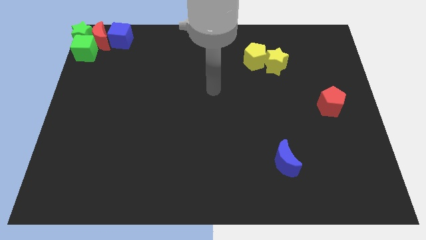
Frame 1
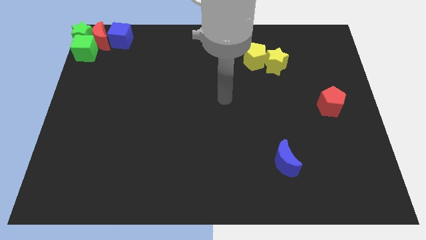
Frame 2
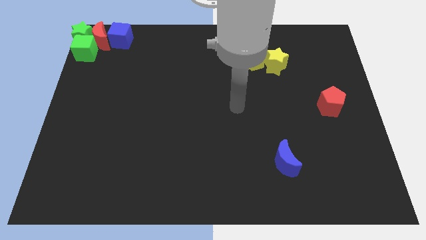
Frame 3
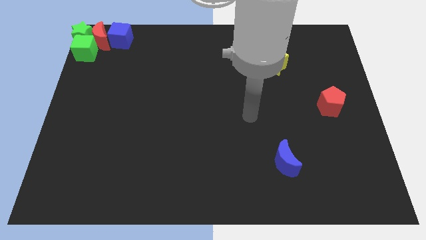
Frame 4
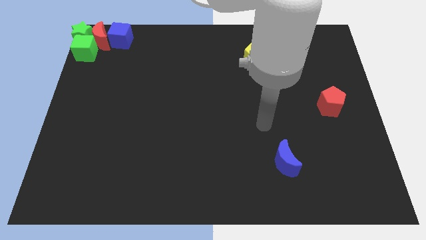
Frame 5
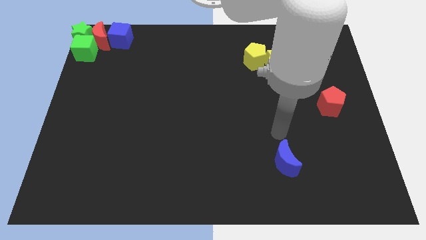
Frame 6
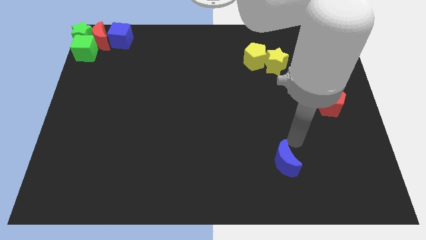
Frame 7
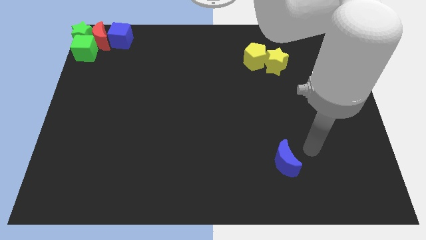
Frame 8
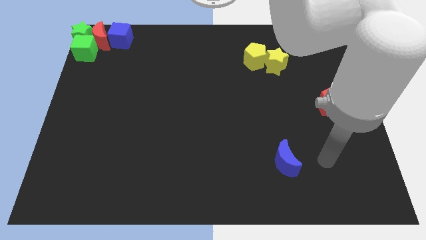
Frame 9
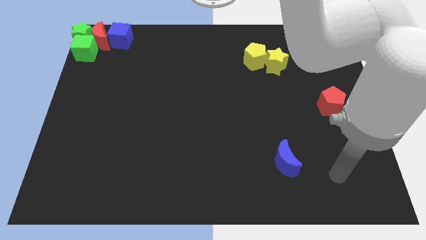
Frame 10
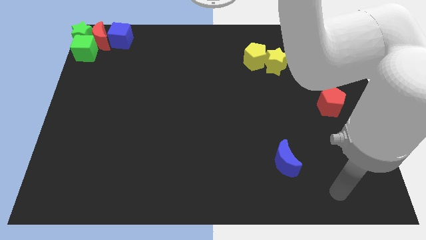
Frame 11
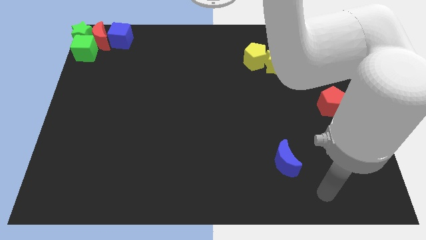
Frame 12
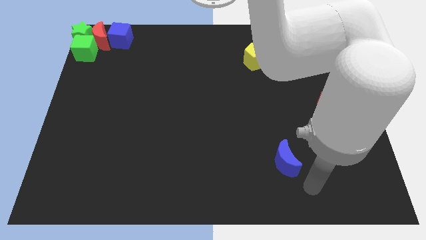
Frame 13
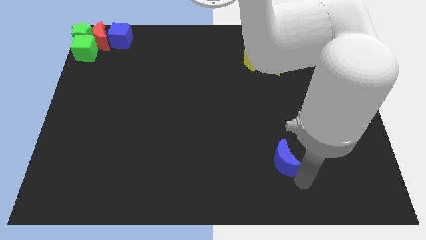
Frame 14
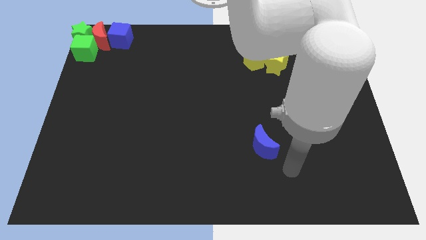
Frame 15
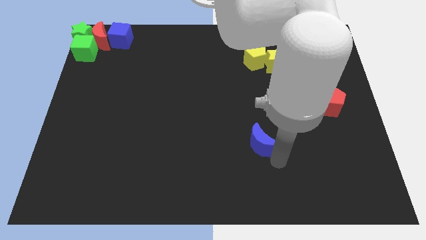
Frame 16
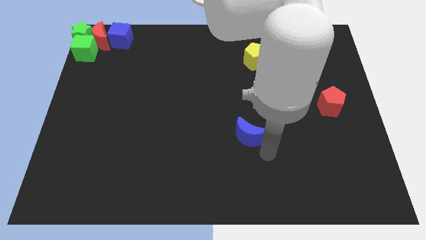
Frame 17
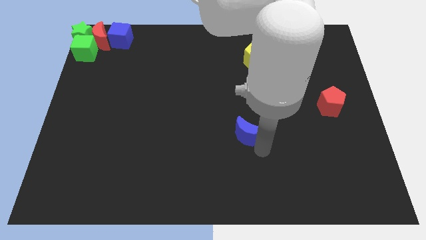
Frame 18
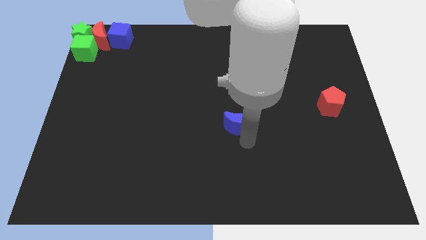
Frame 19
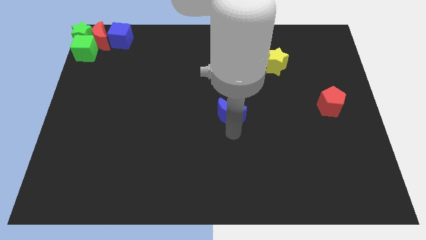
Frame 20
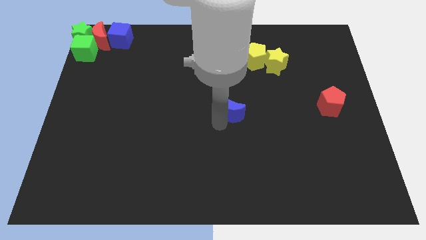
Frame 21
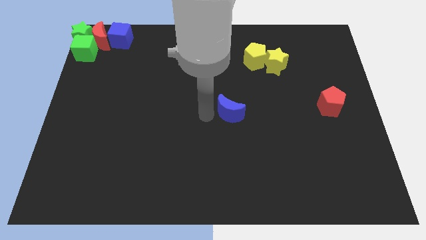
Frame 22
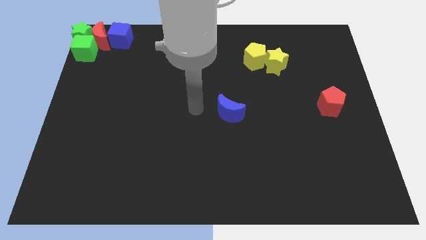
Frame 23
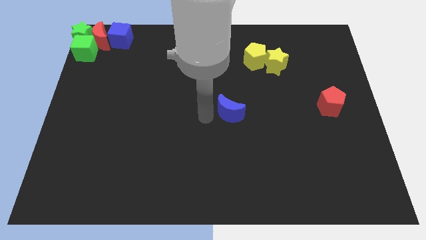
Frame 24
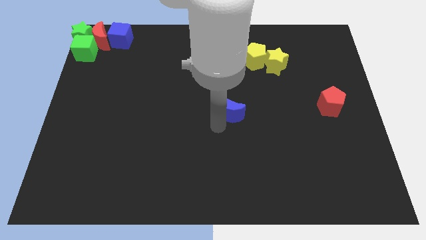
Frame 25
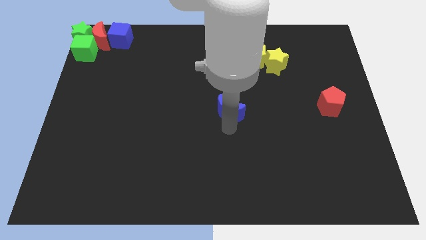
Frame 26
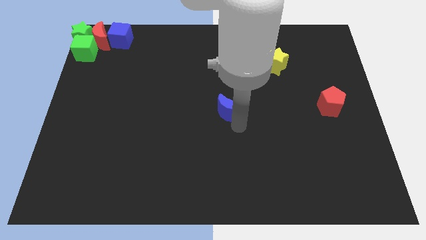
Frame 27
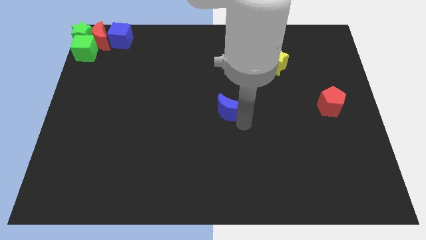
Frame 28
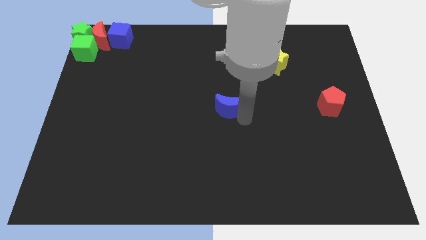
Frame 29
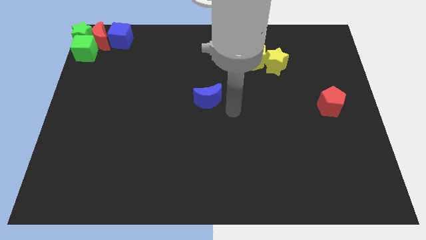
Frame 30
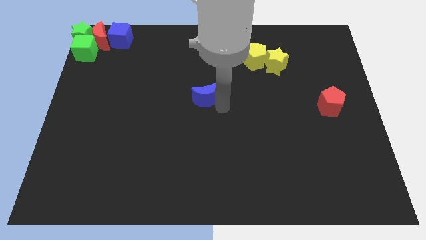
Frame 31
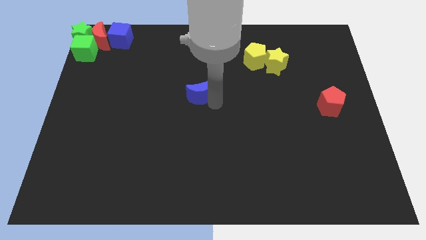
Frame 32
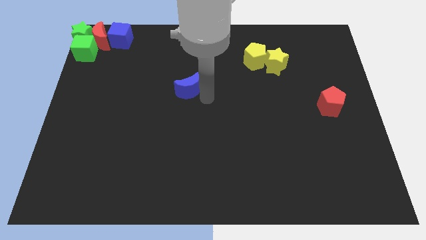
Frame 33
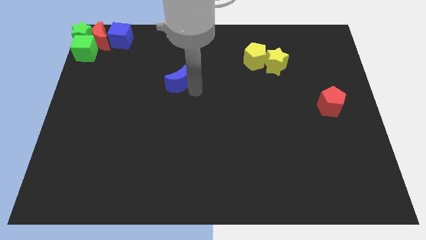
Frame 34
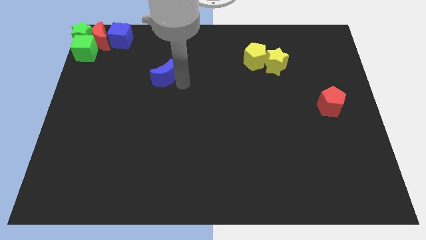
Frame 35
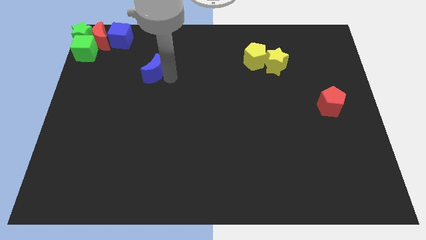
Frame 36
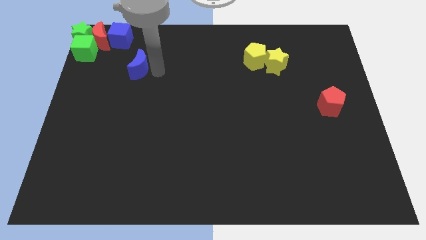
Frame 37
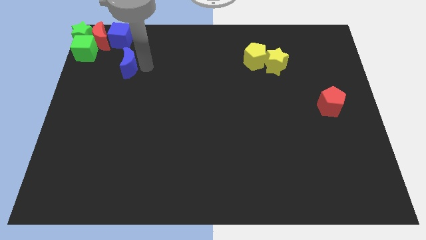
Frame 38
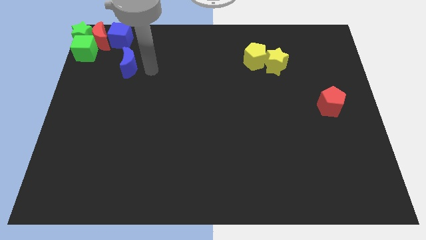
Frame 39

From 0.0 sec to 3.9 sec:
move the blue crescent towards the blue cube

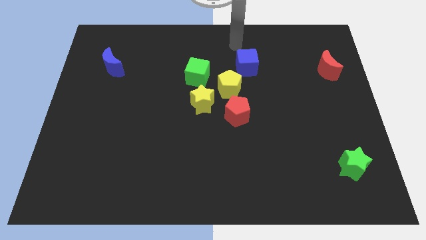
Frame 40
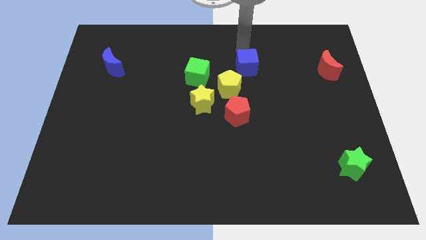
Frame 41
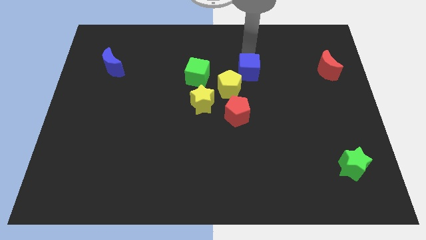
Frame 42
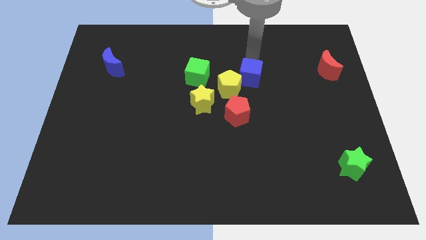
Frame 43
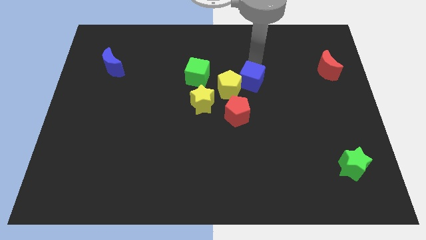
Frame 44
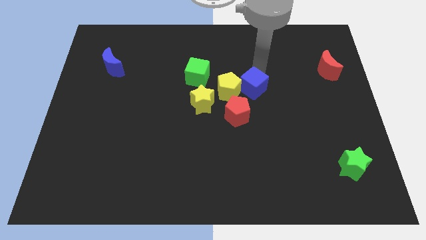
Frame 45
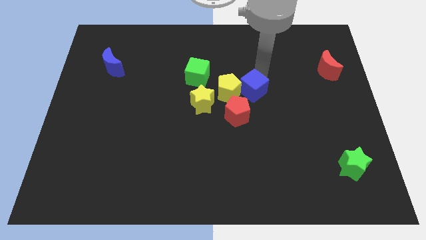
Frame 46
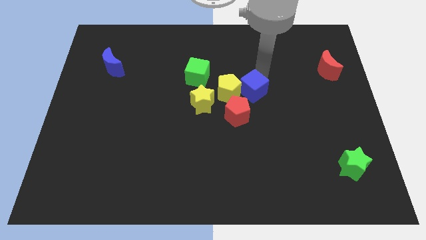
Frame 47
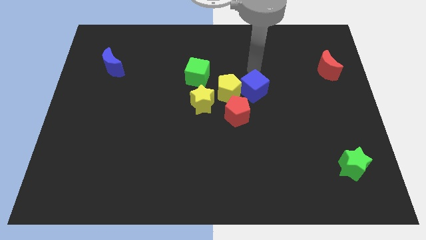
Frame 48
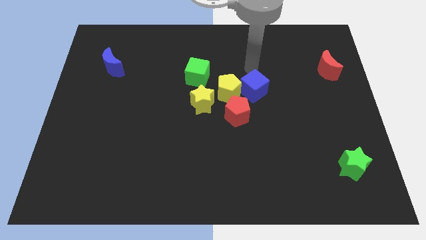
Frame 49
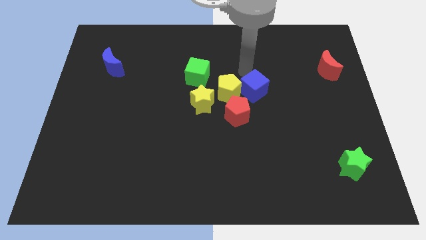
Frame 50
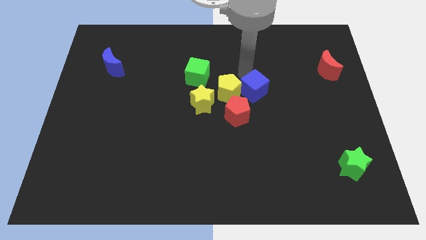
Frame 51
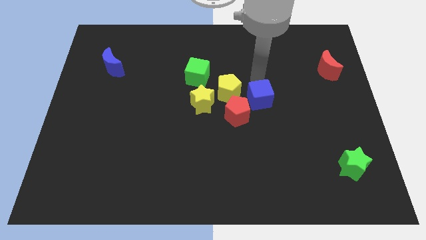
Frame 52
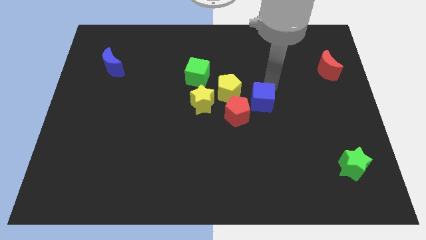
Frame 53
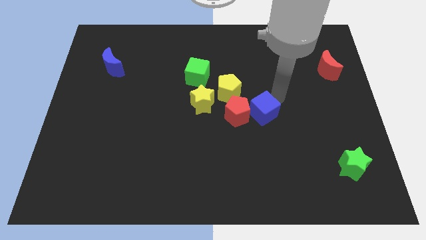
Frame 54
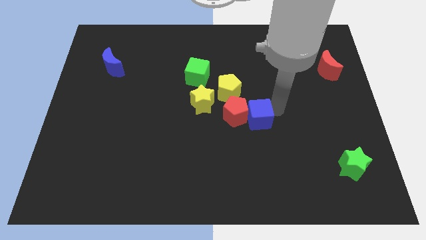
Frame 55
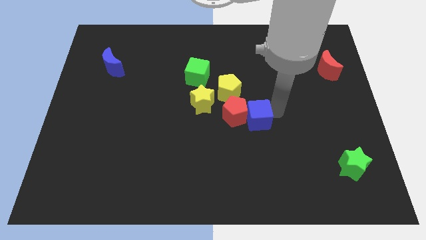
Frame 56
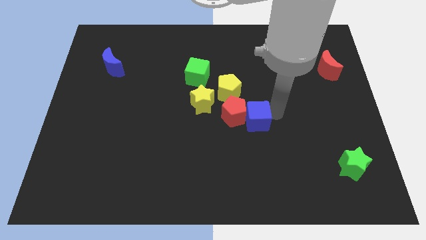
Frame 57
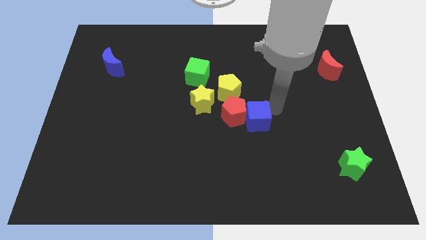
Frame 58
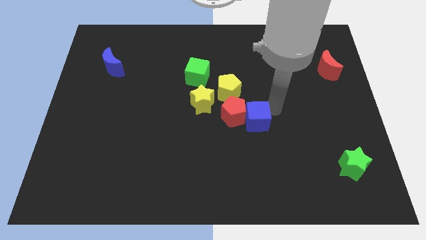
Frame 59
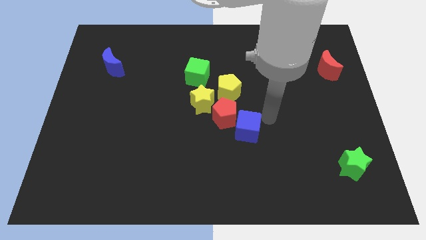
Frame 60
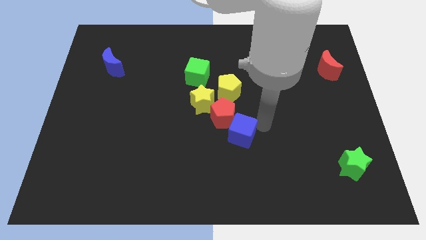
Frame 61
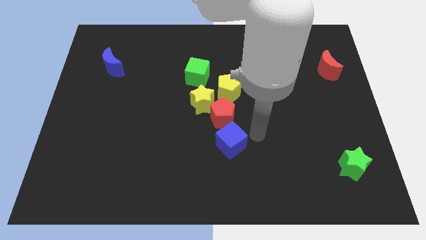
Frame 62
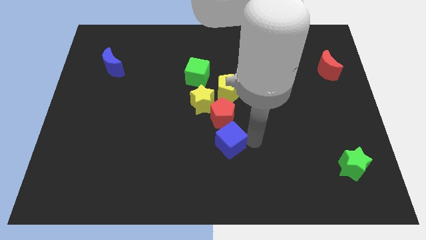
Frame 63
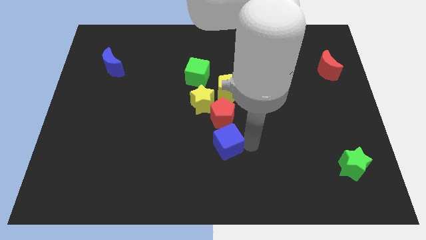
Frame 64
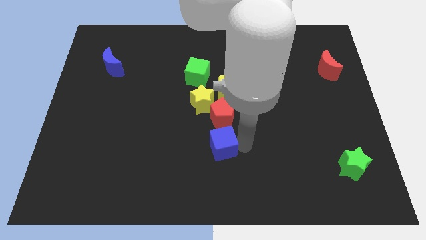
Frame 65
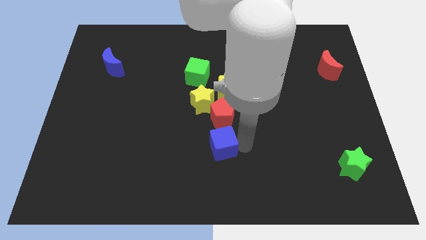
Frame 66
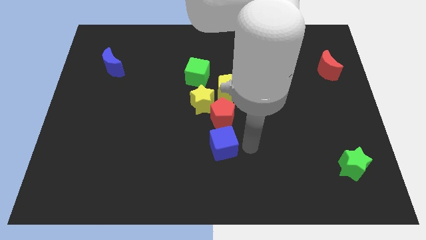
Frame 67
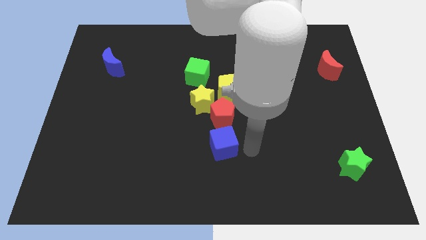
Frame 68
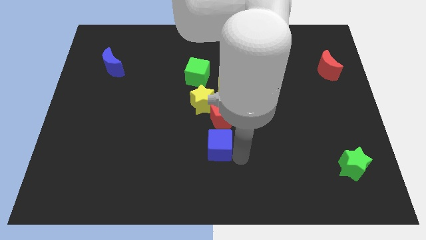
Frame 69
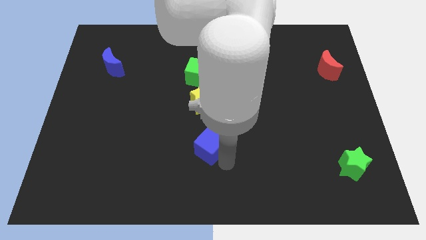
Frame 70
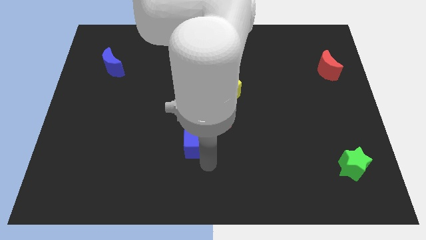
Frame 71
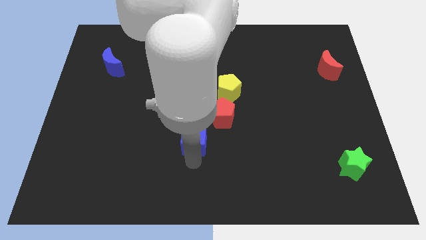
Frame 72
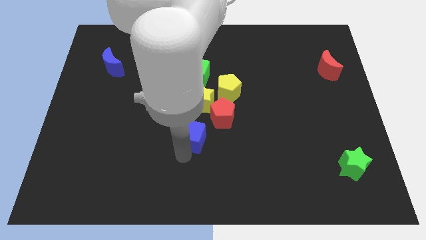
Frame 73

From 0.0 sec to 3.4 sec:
place blue cube below yellow star

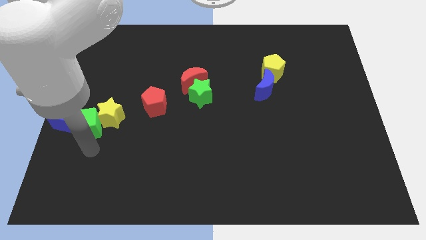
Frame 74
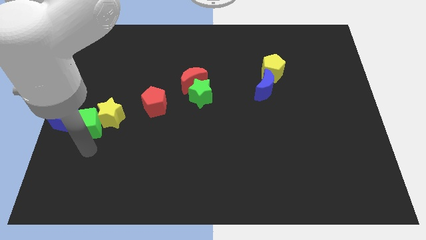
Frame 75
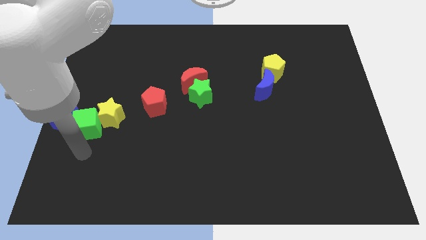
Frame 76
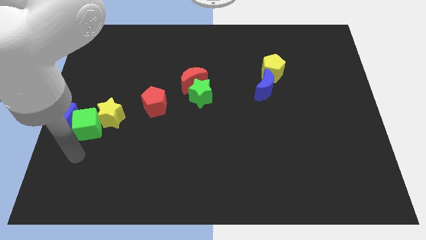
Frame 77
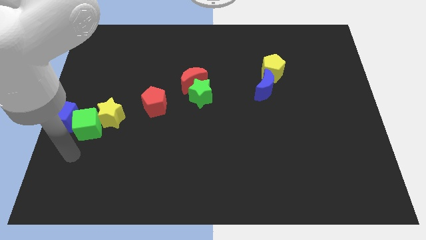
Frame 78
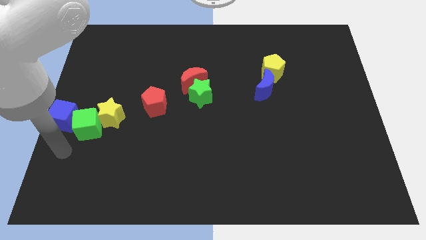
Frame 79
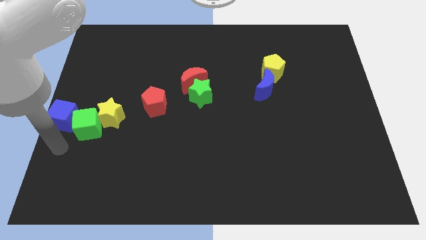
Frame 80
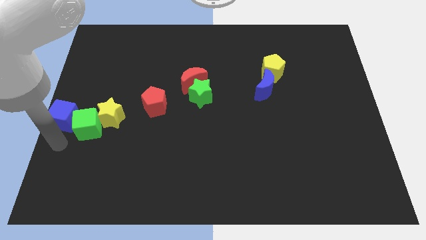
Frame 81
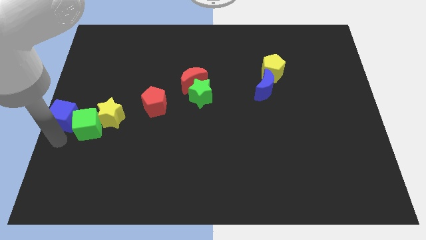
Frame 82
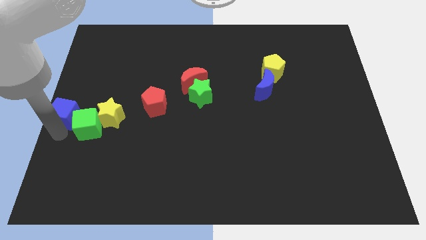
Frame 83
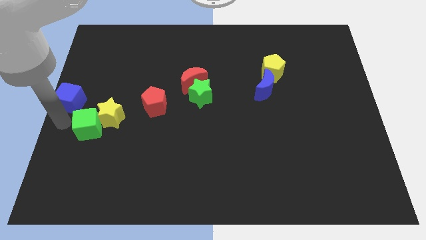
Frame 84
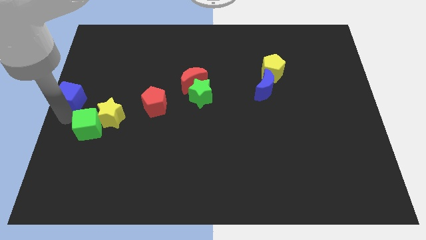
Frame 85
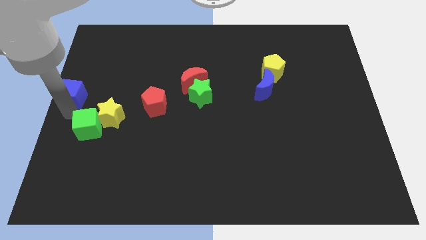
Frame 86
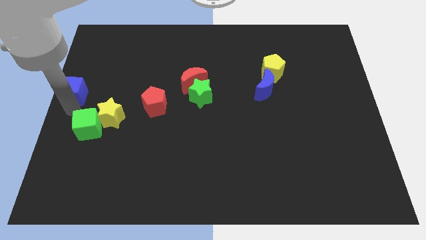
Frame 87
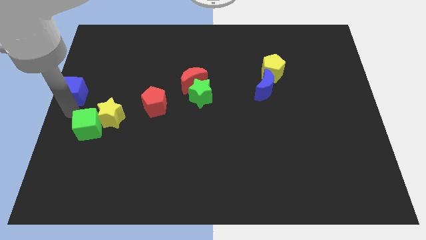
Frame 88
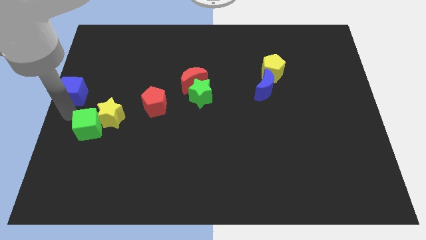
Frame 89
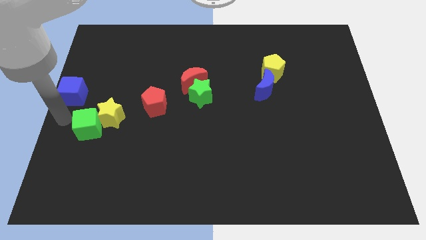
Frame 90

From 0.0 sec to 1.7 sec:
separate the blue cube from the green cube
